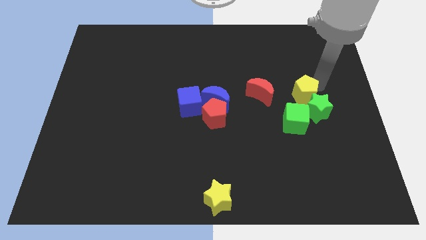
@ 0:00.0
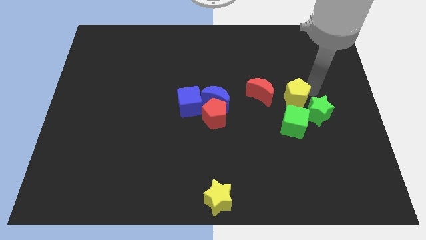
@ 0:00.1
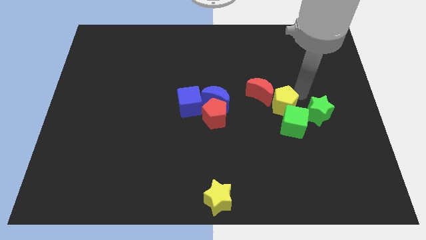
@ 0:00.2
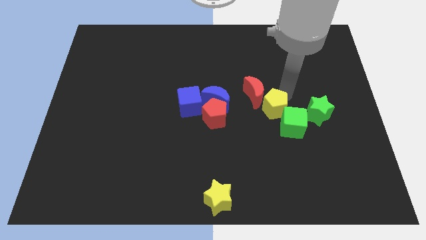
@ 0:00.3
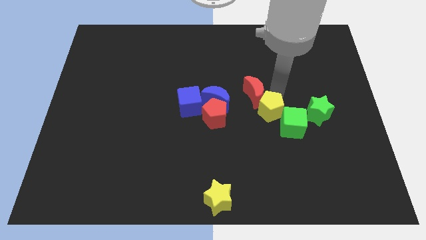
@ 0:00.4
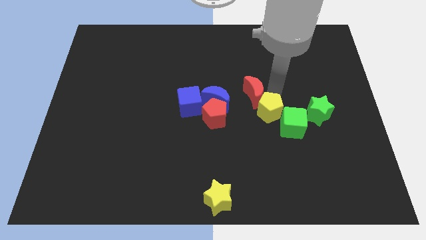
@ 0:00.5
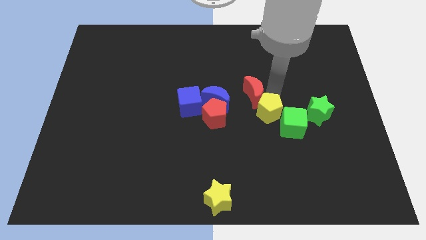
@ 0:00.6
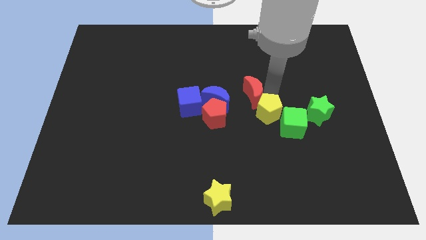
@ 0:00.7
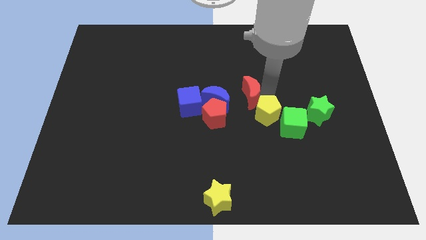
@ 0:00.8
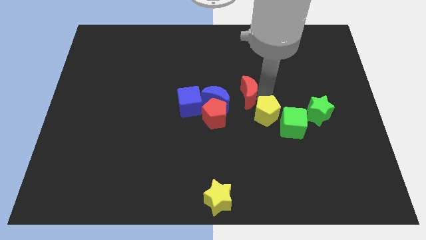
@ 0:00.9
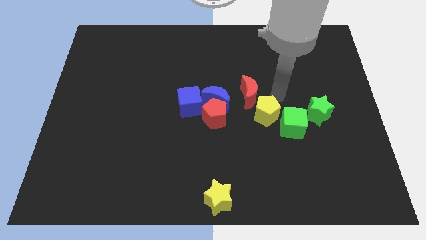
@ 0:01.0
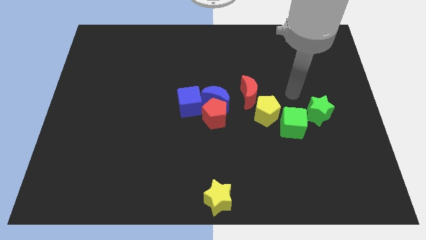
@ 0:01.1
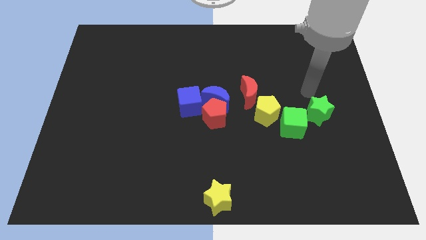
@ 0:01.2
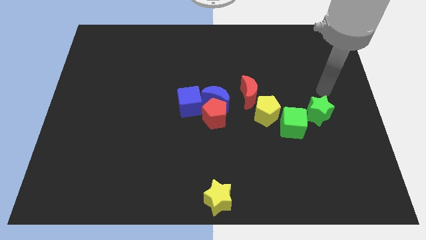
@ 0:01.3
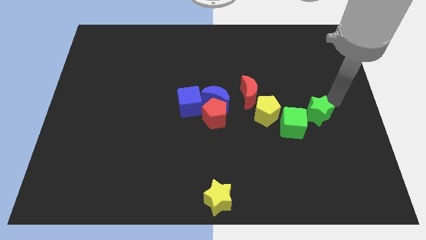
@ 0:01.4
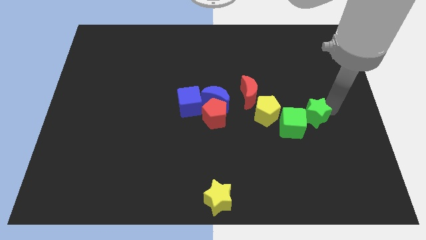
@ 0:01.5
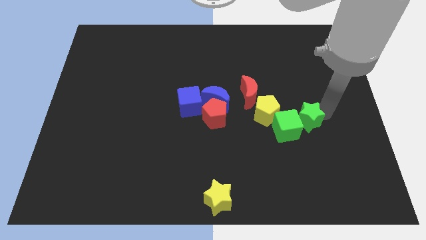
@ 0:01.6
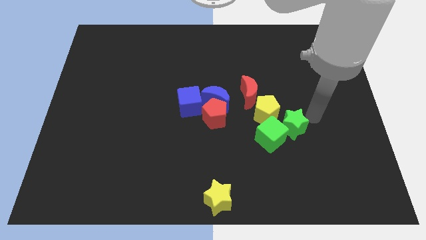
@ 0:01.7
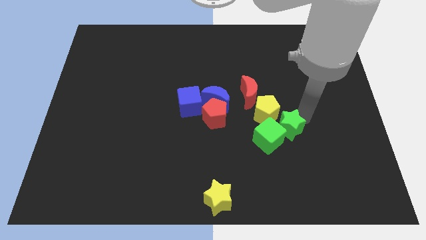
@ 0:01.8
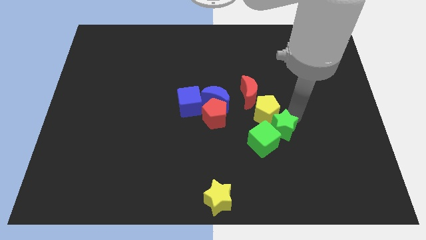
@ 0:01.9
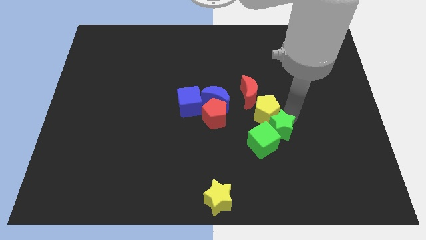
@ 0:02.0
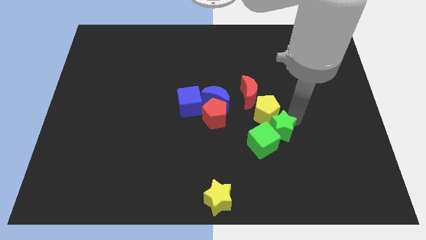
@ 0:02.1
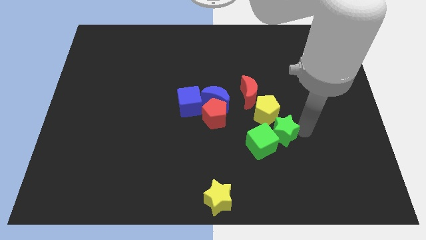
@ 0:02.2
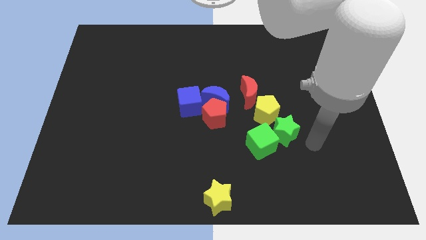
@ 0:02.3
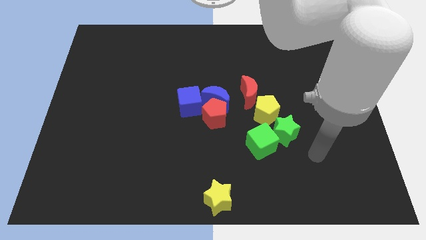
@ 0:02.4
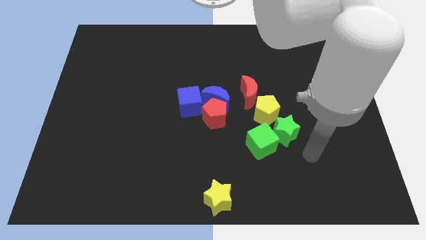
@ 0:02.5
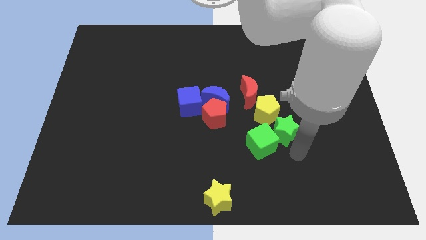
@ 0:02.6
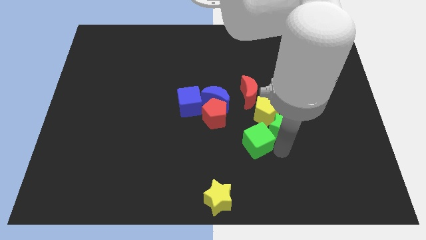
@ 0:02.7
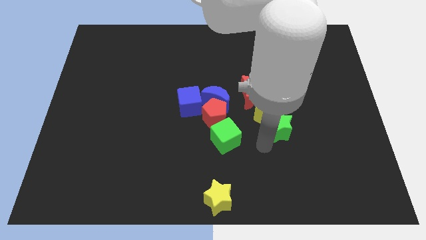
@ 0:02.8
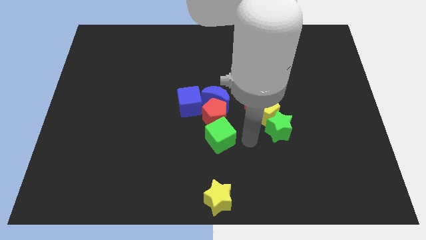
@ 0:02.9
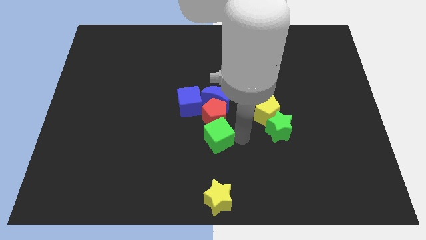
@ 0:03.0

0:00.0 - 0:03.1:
separate green cube from the green star

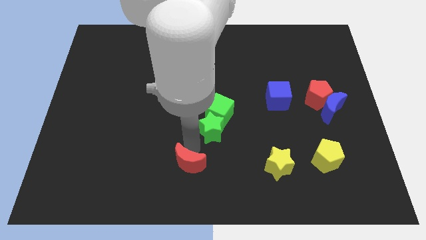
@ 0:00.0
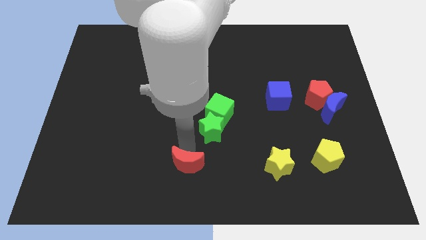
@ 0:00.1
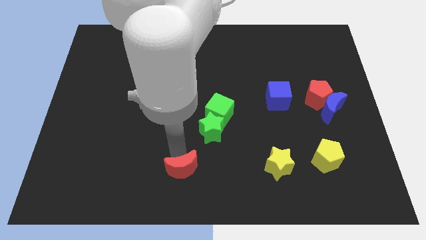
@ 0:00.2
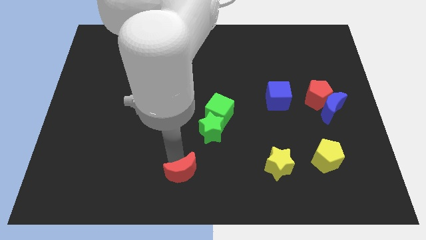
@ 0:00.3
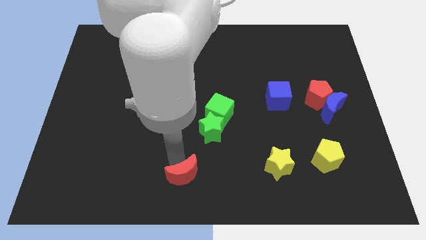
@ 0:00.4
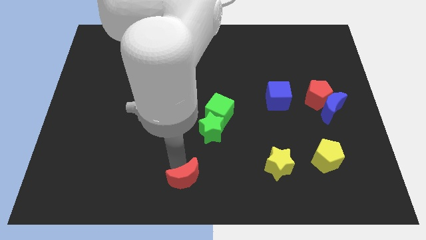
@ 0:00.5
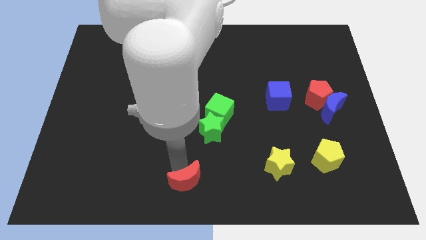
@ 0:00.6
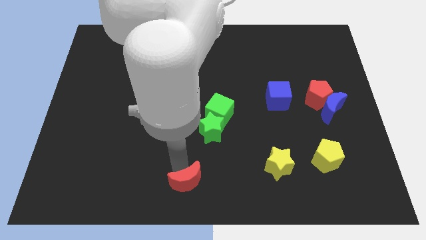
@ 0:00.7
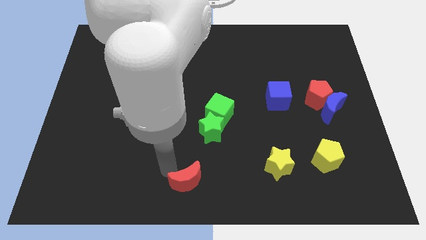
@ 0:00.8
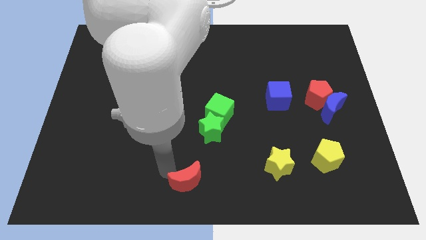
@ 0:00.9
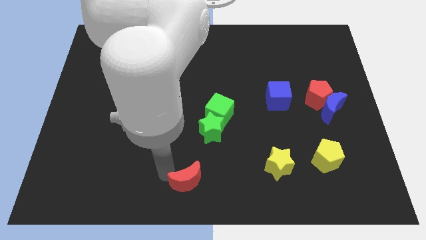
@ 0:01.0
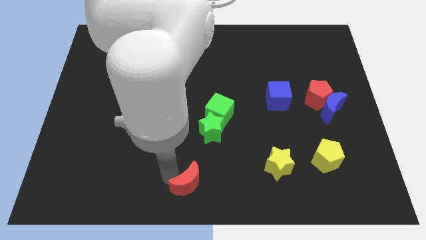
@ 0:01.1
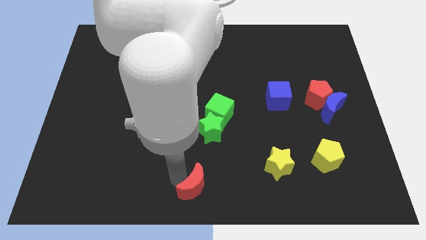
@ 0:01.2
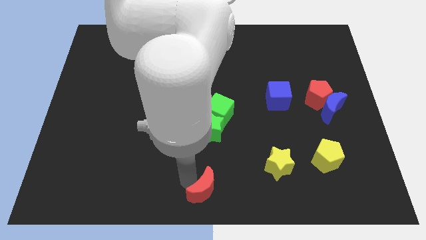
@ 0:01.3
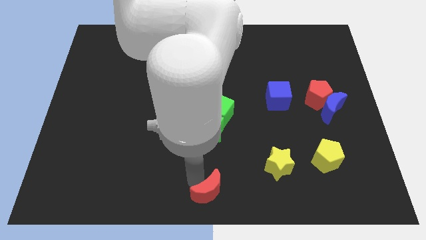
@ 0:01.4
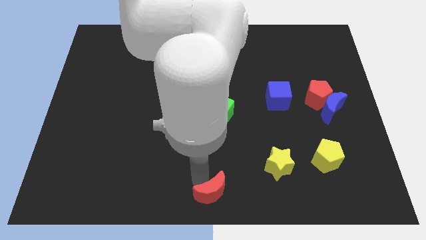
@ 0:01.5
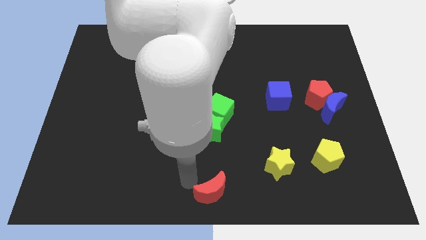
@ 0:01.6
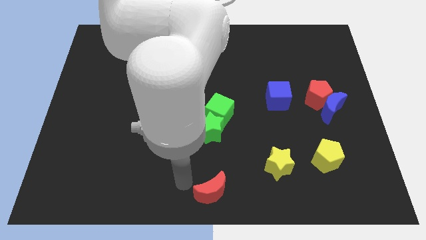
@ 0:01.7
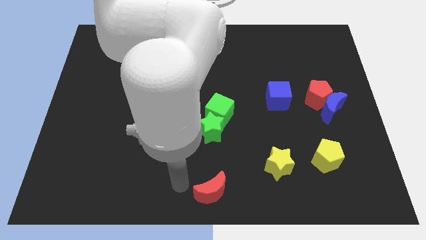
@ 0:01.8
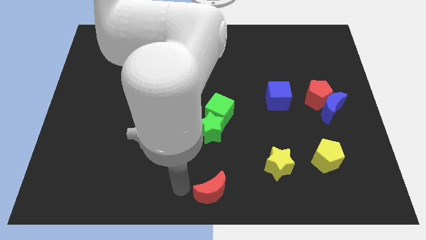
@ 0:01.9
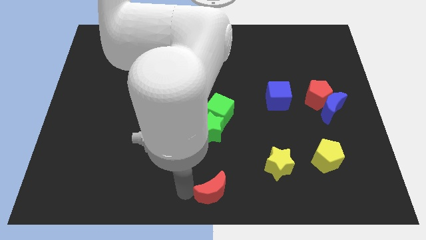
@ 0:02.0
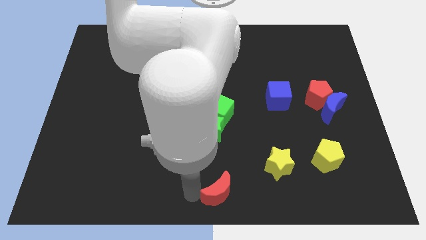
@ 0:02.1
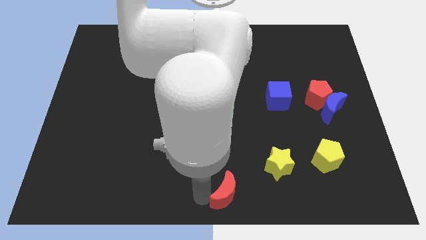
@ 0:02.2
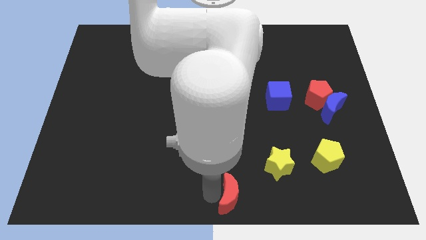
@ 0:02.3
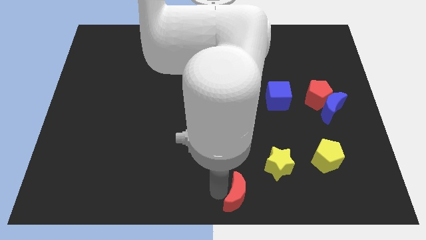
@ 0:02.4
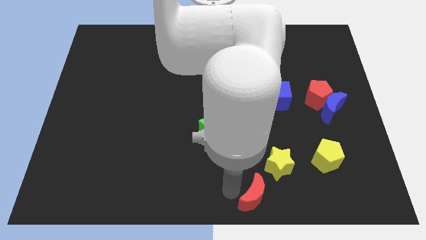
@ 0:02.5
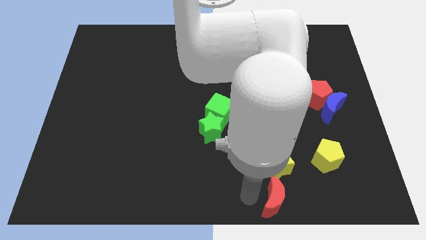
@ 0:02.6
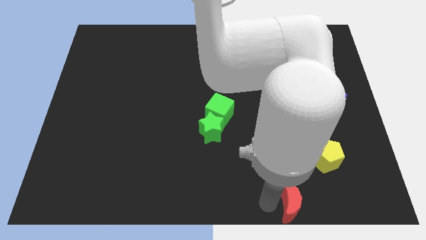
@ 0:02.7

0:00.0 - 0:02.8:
move red moon below yellow star

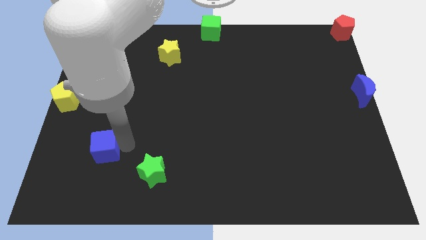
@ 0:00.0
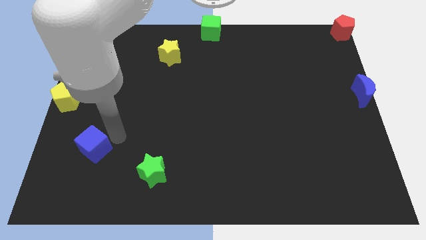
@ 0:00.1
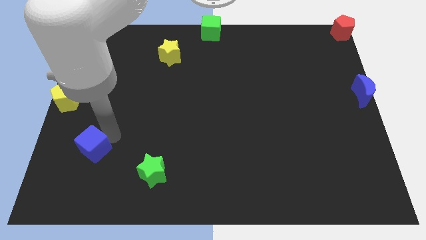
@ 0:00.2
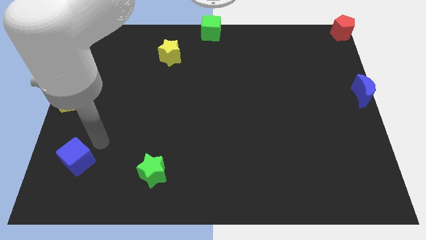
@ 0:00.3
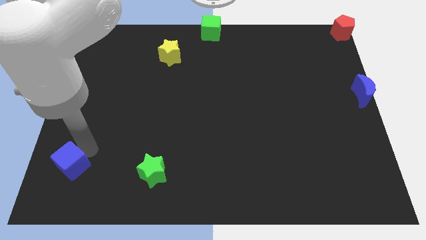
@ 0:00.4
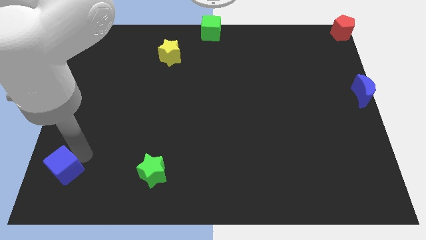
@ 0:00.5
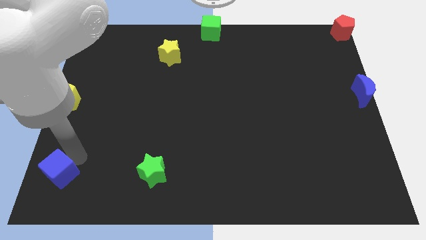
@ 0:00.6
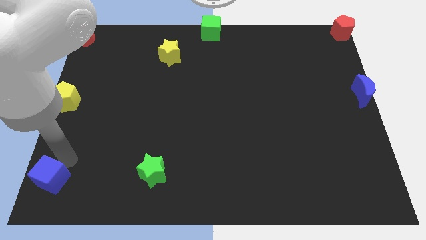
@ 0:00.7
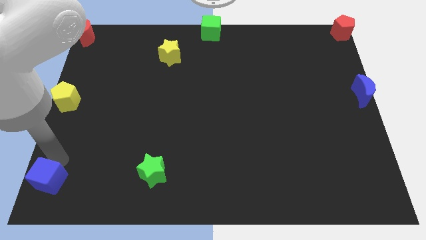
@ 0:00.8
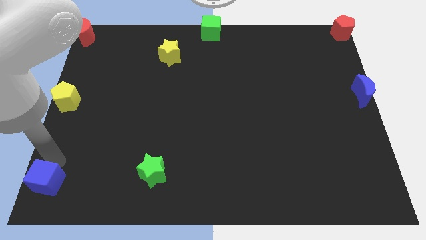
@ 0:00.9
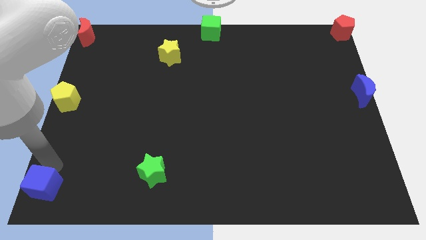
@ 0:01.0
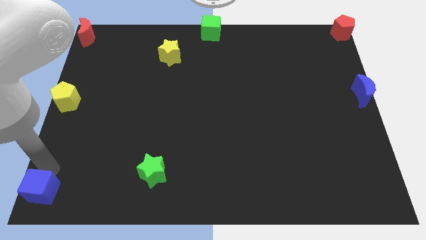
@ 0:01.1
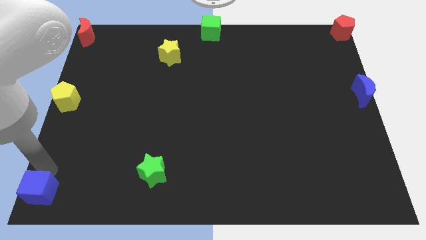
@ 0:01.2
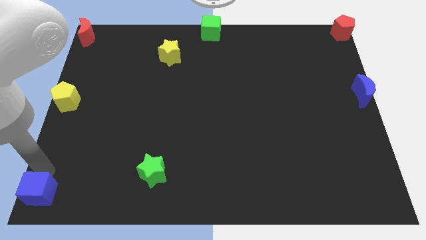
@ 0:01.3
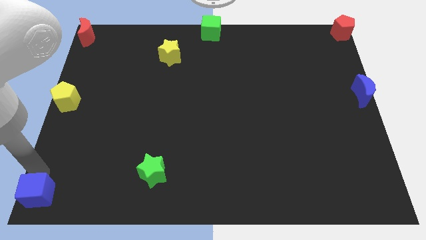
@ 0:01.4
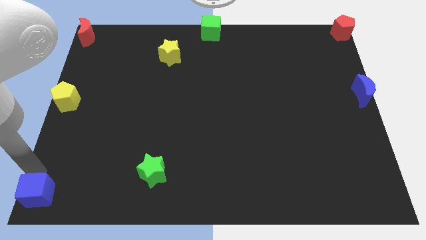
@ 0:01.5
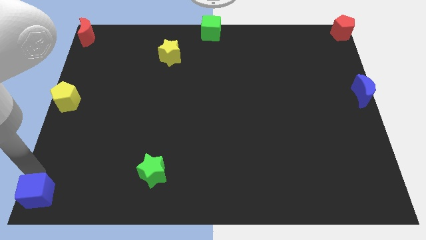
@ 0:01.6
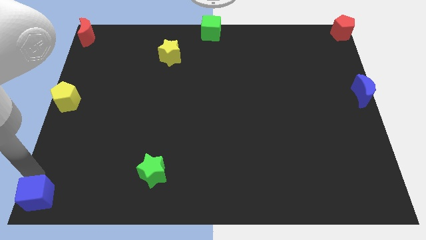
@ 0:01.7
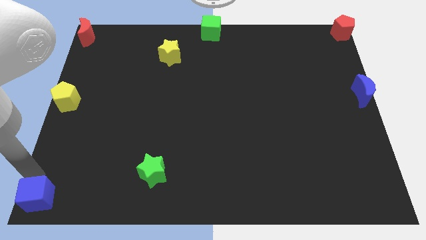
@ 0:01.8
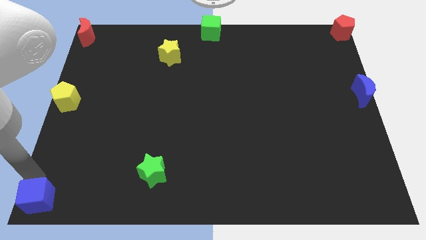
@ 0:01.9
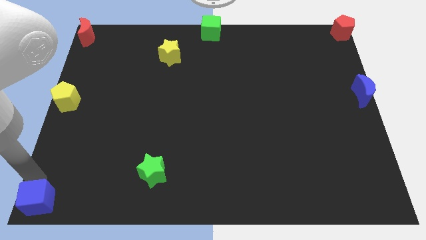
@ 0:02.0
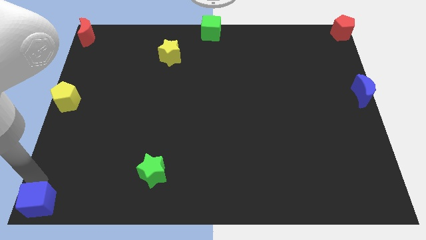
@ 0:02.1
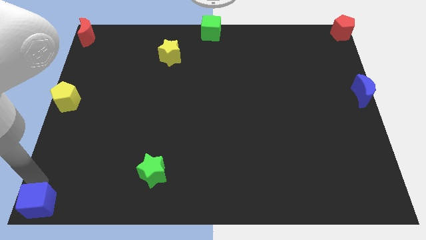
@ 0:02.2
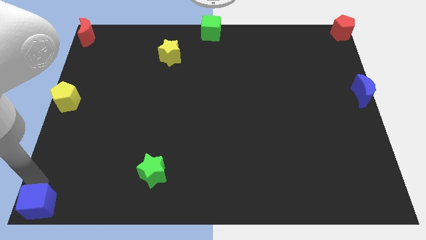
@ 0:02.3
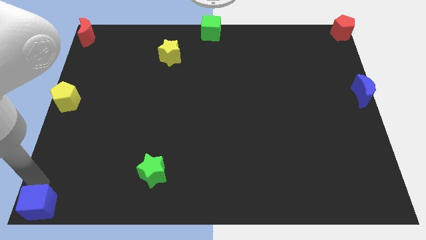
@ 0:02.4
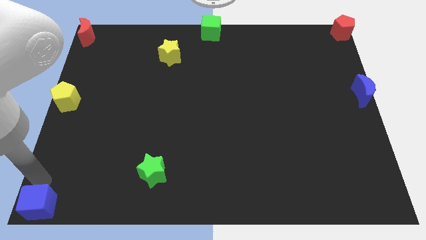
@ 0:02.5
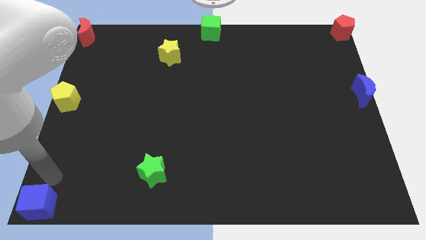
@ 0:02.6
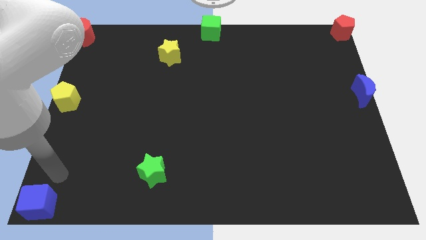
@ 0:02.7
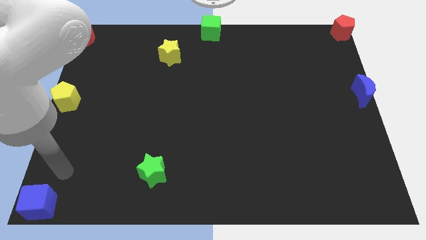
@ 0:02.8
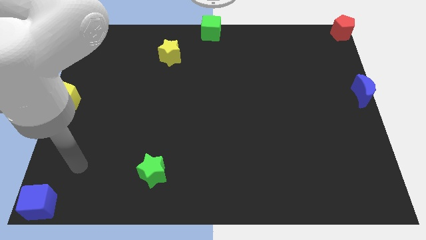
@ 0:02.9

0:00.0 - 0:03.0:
move the blue cube to bottom left side of the board
